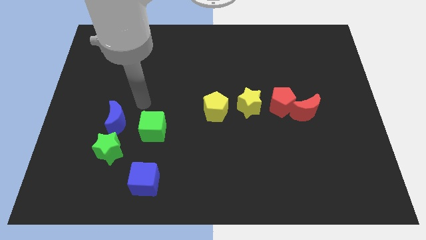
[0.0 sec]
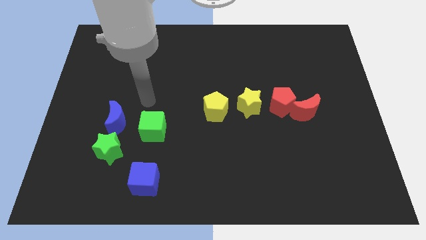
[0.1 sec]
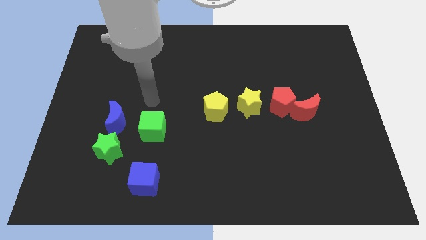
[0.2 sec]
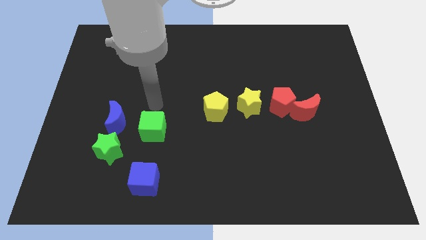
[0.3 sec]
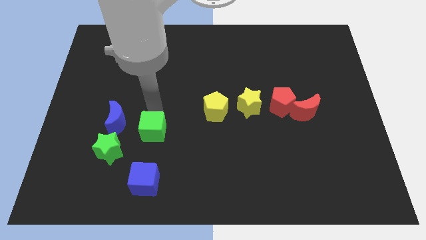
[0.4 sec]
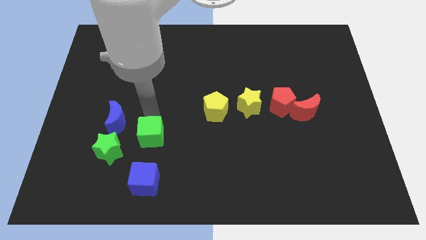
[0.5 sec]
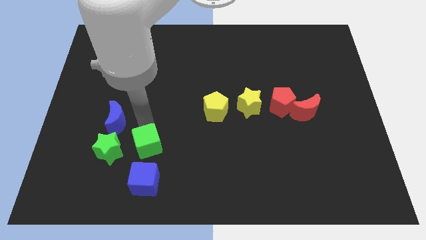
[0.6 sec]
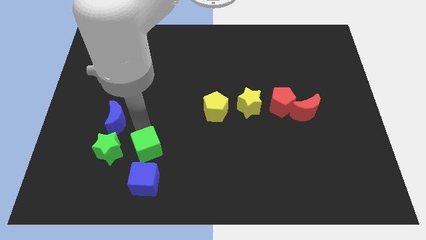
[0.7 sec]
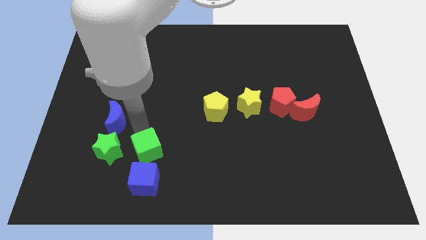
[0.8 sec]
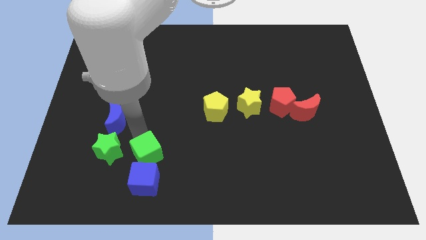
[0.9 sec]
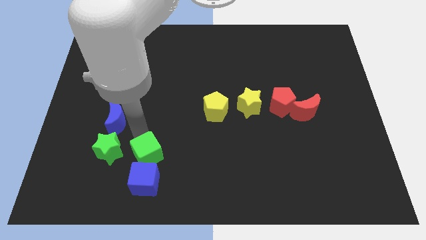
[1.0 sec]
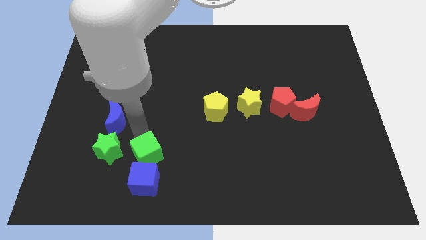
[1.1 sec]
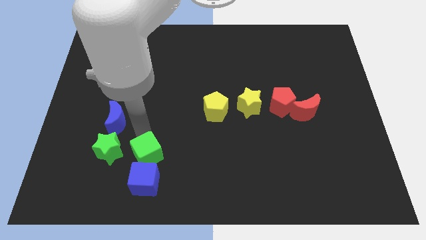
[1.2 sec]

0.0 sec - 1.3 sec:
push the green cube to the top of blue cube

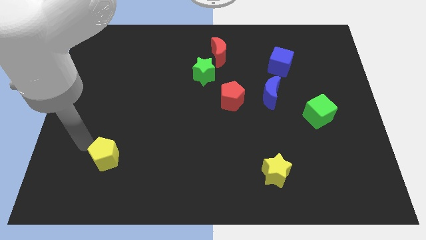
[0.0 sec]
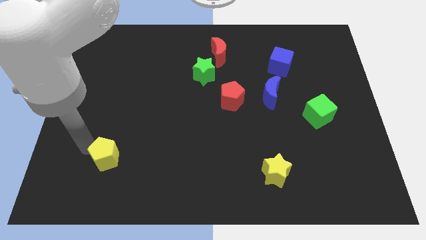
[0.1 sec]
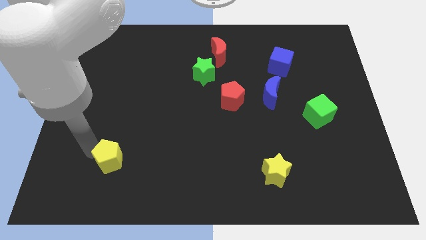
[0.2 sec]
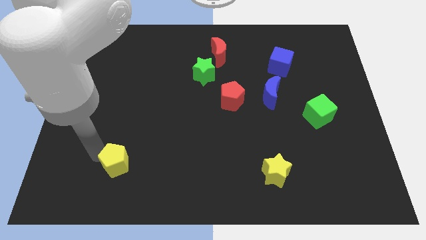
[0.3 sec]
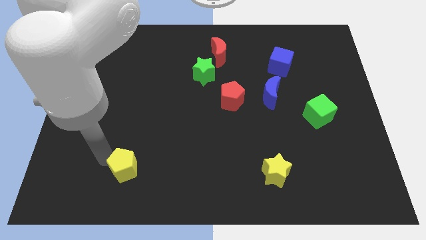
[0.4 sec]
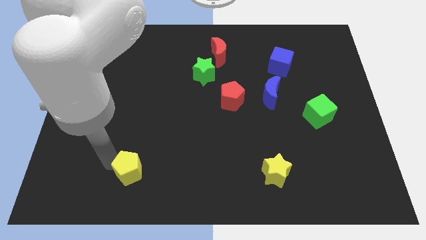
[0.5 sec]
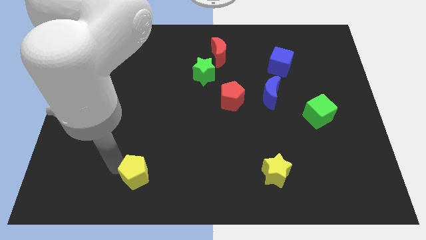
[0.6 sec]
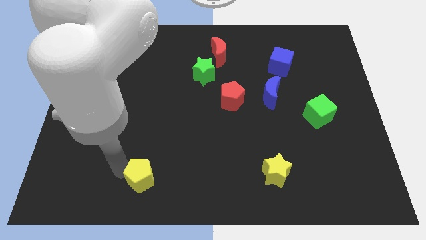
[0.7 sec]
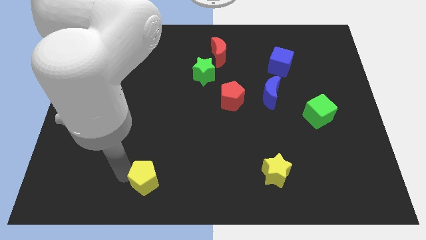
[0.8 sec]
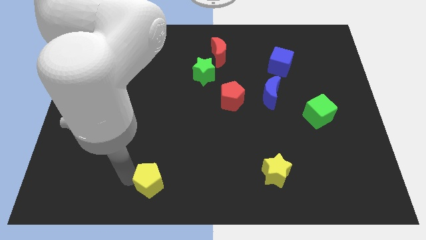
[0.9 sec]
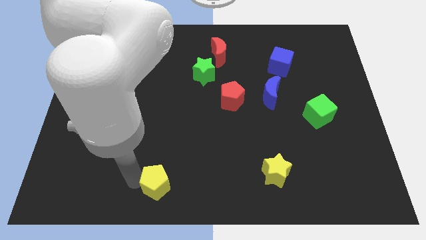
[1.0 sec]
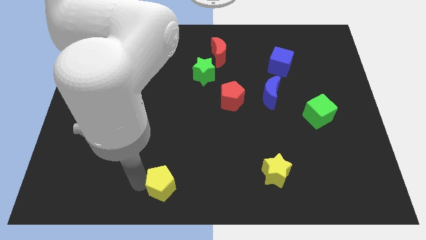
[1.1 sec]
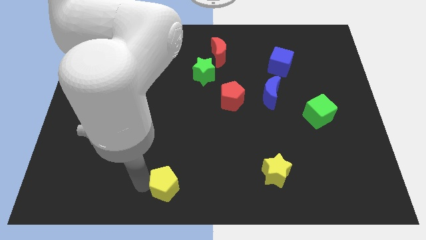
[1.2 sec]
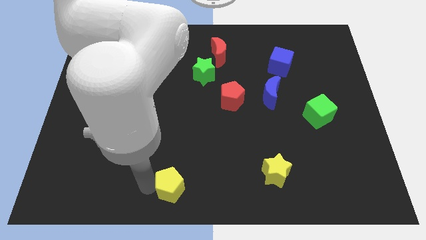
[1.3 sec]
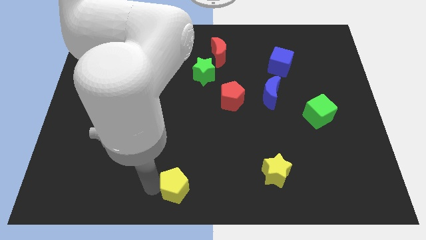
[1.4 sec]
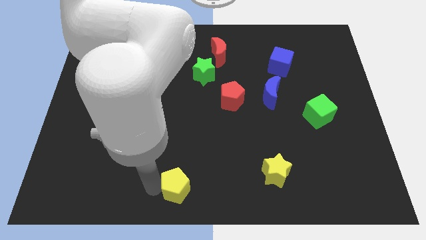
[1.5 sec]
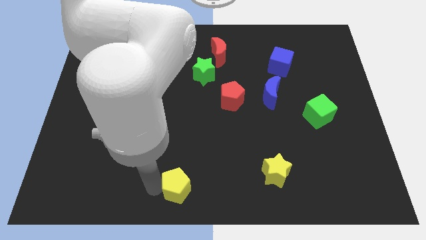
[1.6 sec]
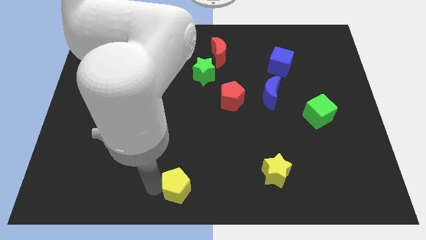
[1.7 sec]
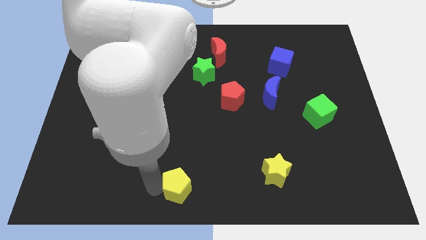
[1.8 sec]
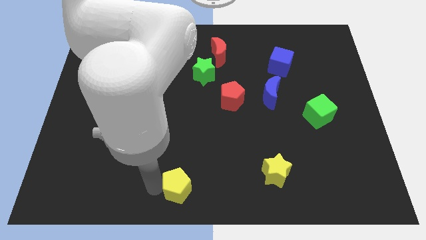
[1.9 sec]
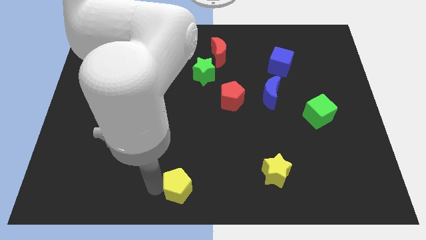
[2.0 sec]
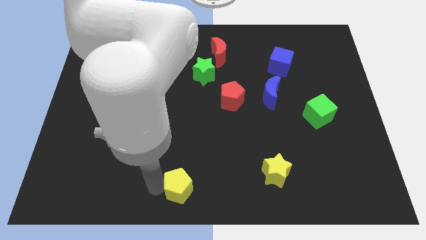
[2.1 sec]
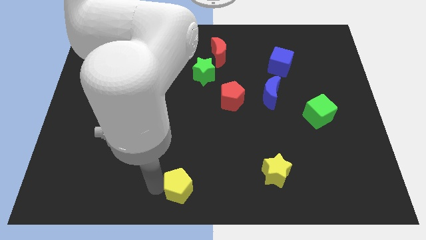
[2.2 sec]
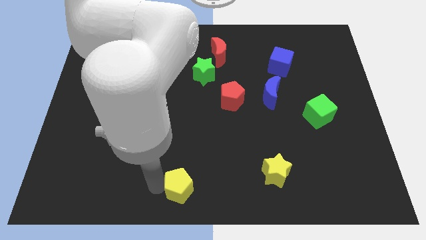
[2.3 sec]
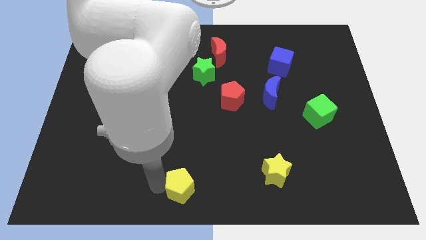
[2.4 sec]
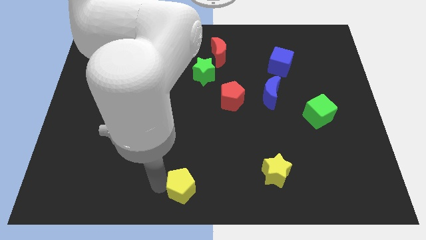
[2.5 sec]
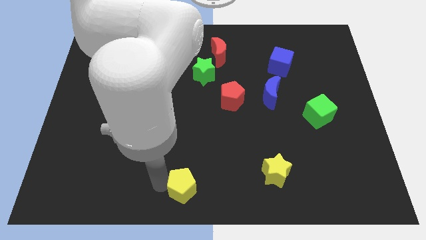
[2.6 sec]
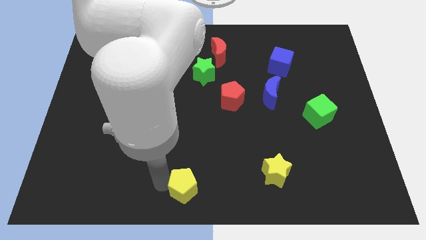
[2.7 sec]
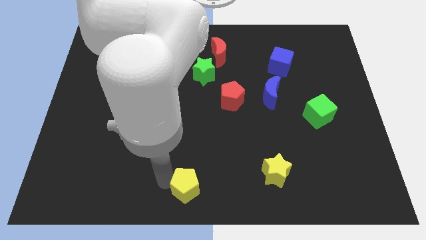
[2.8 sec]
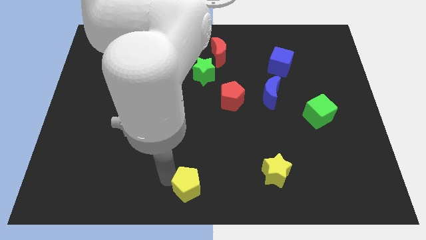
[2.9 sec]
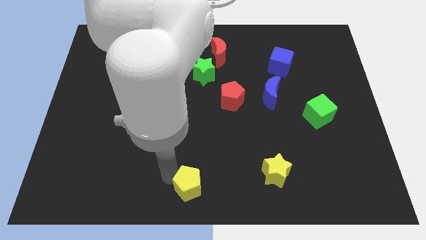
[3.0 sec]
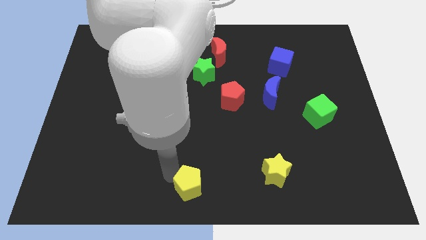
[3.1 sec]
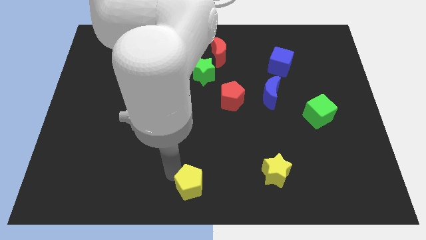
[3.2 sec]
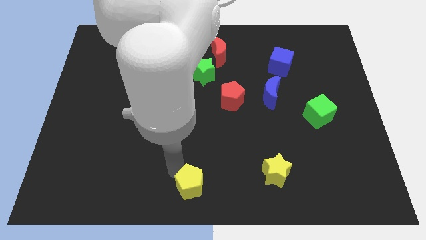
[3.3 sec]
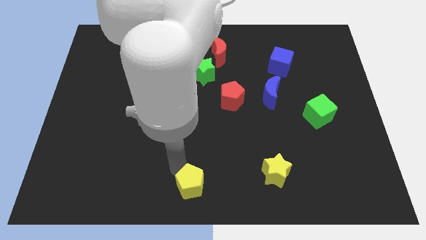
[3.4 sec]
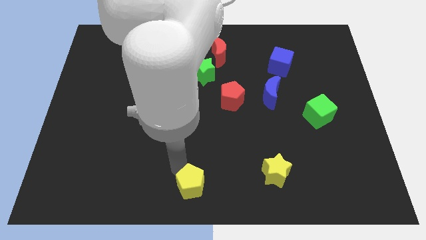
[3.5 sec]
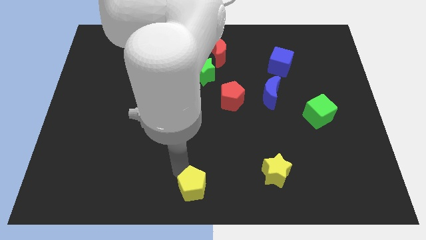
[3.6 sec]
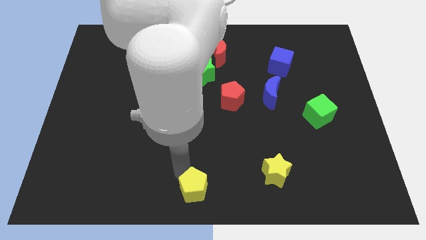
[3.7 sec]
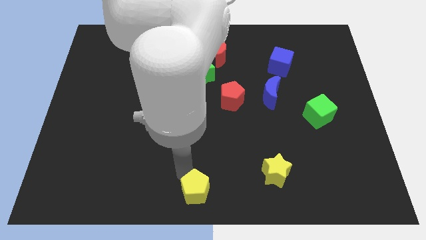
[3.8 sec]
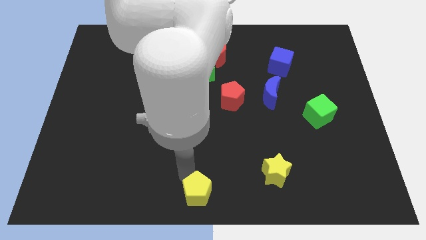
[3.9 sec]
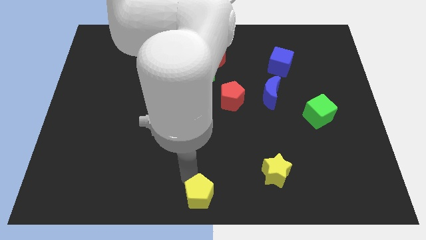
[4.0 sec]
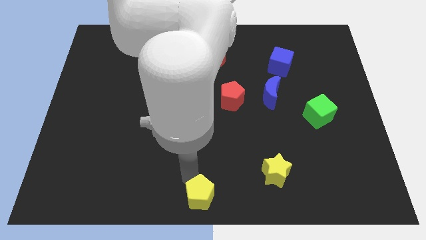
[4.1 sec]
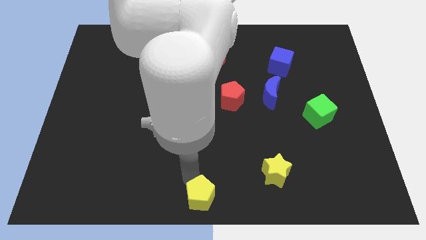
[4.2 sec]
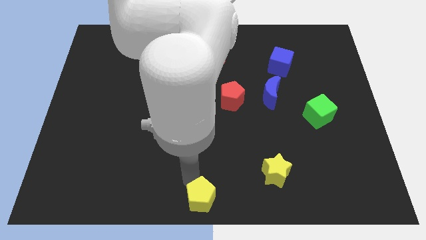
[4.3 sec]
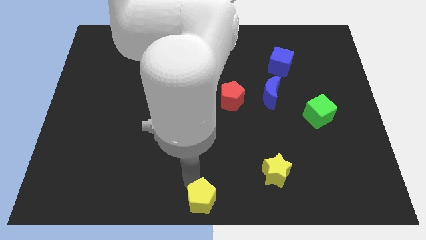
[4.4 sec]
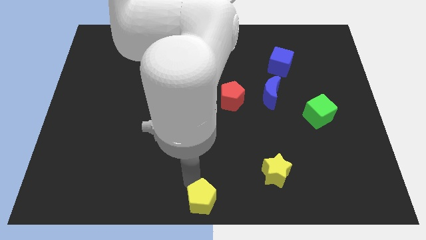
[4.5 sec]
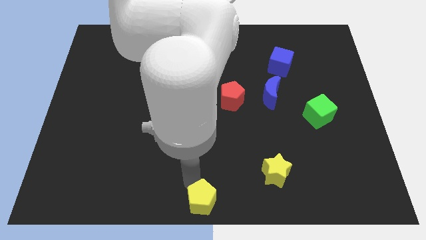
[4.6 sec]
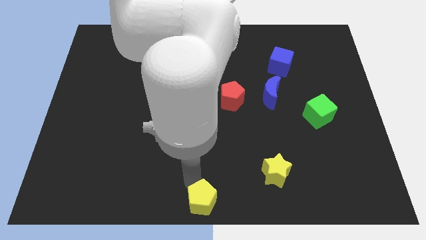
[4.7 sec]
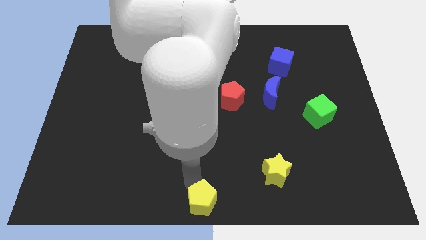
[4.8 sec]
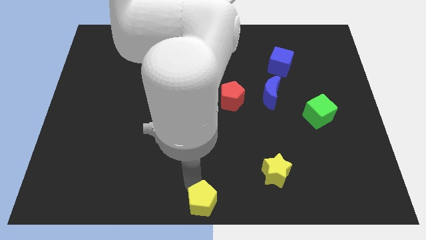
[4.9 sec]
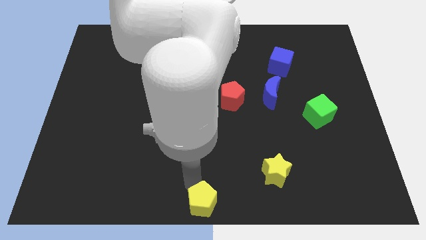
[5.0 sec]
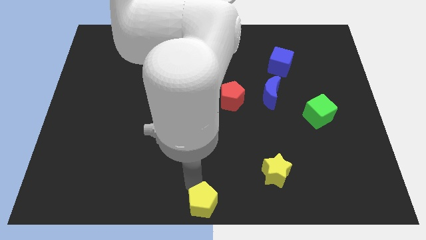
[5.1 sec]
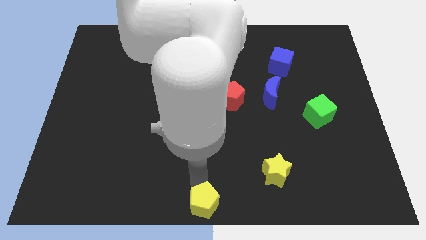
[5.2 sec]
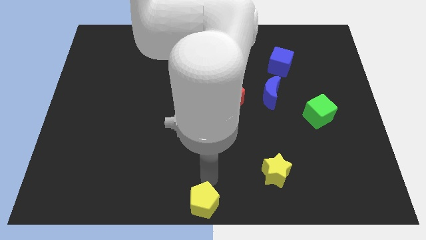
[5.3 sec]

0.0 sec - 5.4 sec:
push the yellow pentagon to the bottom left of the yellow star

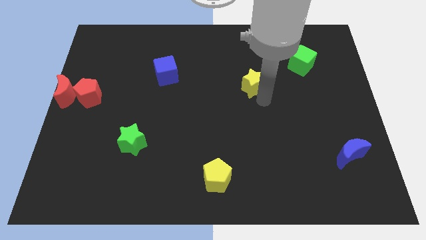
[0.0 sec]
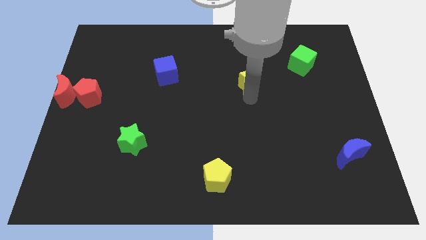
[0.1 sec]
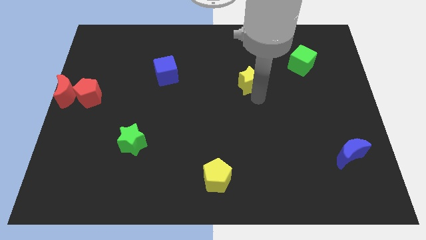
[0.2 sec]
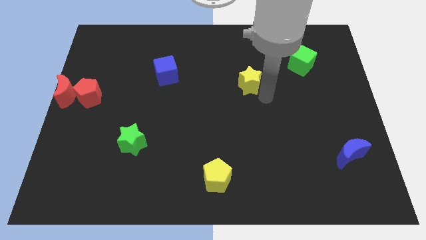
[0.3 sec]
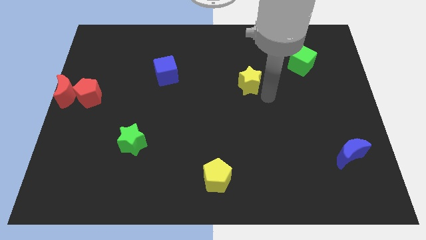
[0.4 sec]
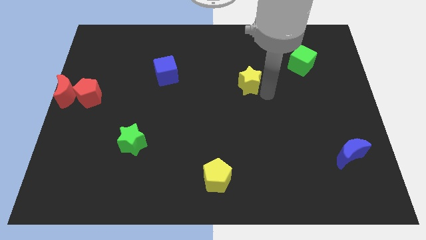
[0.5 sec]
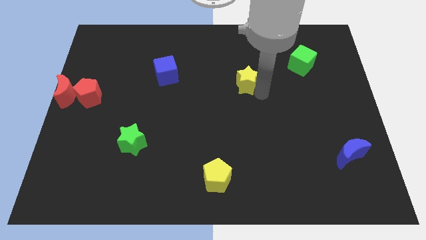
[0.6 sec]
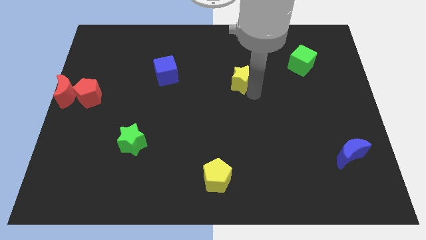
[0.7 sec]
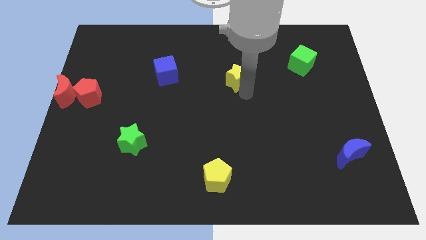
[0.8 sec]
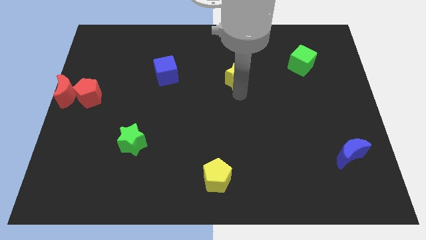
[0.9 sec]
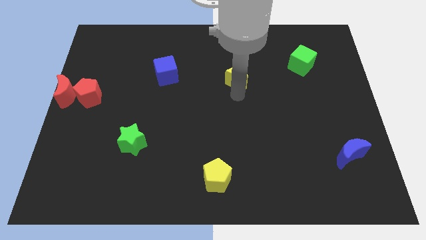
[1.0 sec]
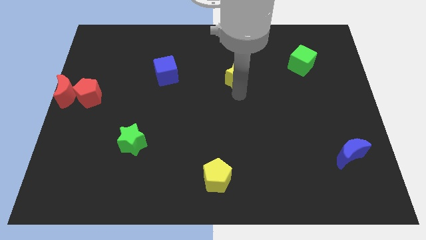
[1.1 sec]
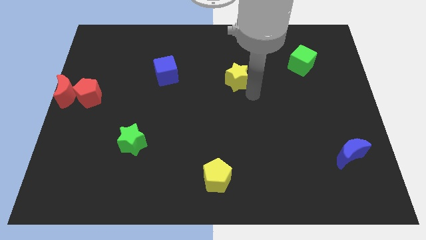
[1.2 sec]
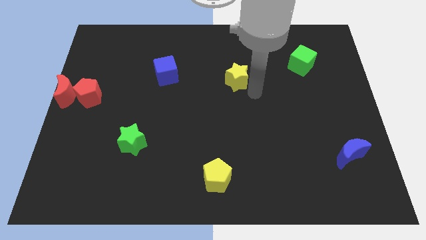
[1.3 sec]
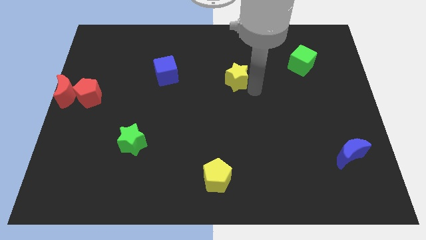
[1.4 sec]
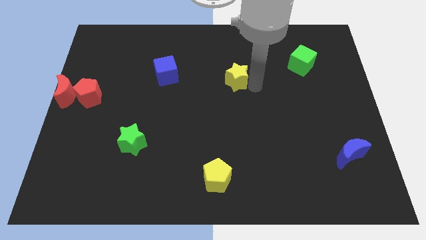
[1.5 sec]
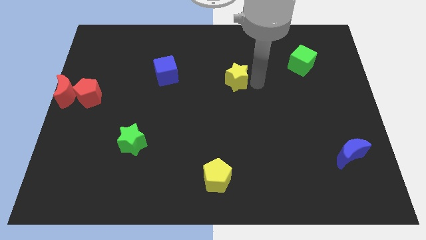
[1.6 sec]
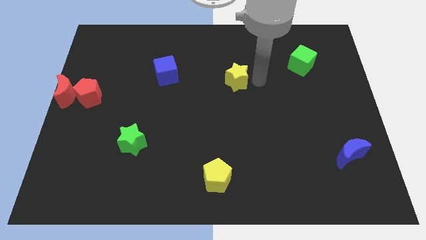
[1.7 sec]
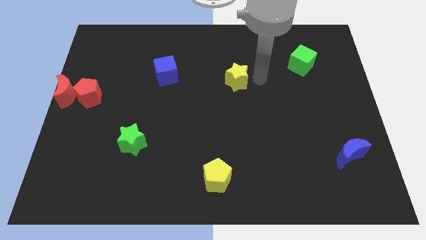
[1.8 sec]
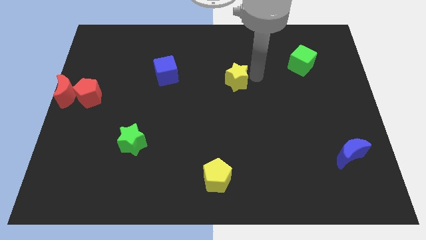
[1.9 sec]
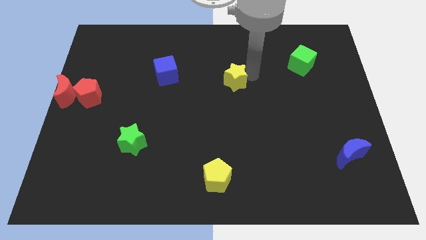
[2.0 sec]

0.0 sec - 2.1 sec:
push the yellow star towards the center

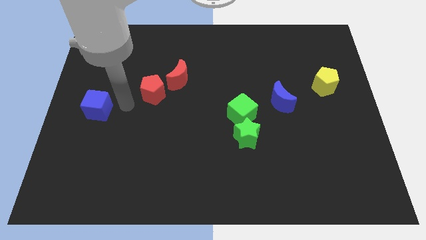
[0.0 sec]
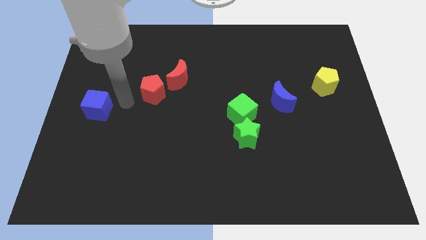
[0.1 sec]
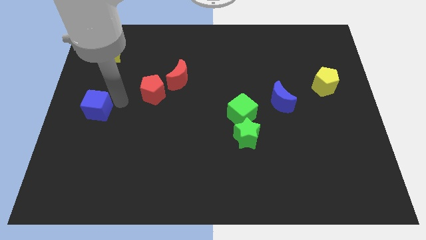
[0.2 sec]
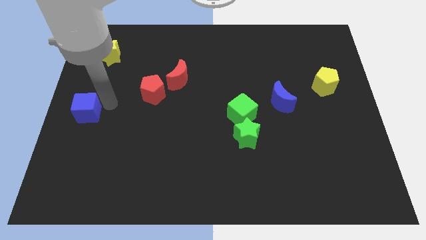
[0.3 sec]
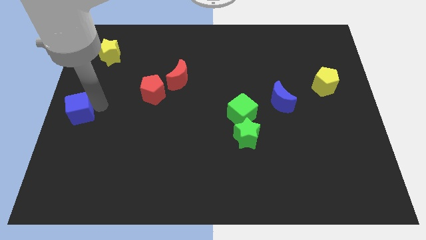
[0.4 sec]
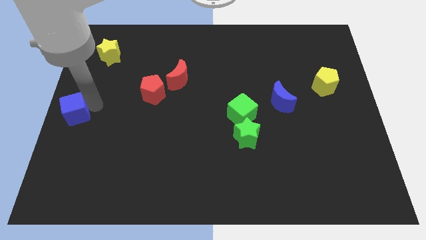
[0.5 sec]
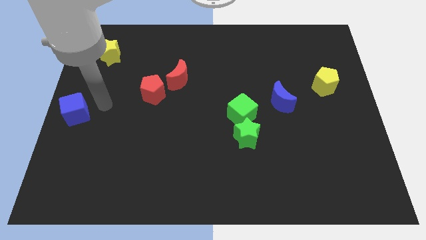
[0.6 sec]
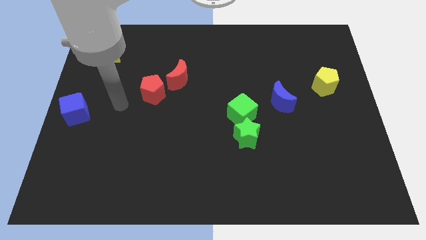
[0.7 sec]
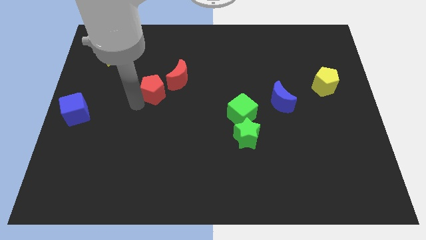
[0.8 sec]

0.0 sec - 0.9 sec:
place blue cube to the left center of the board
